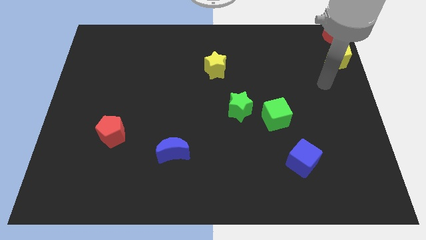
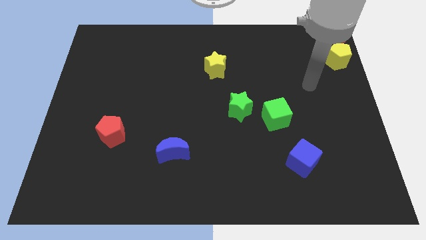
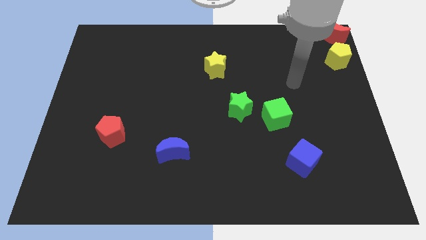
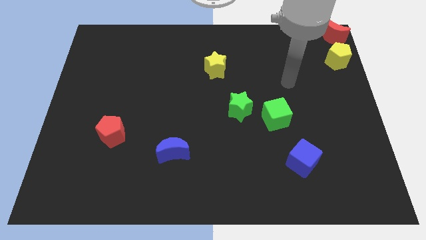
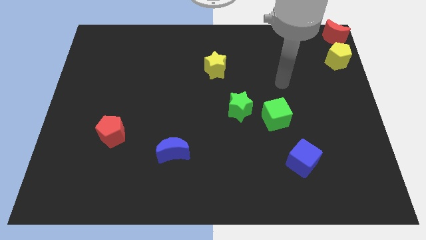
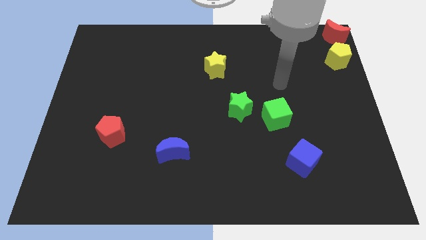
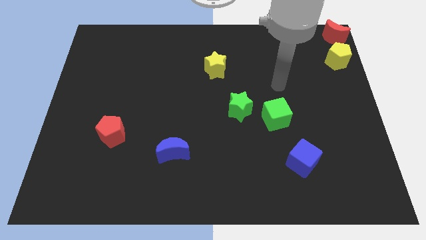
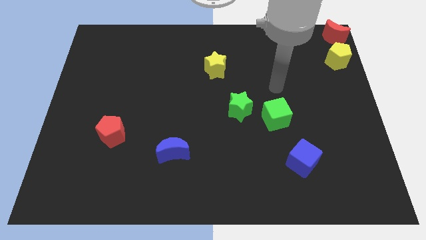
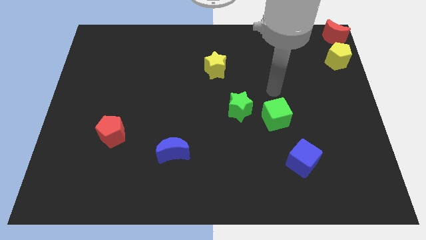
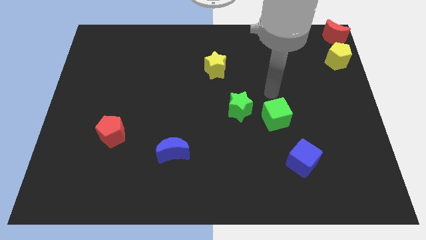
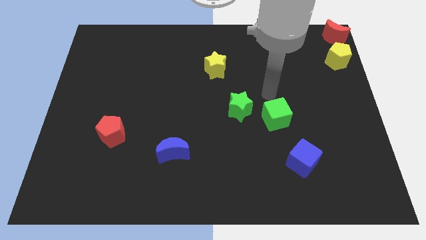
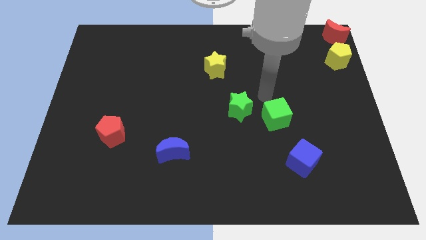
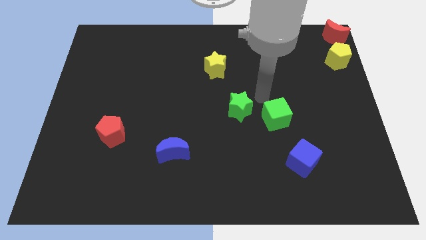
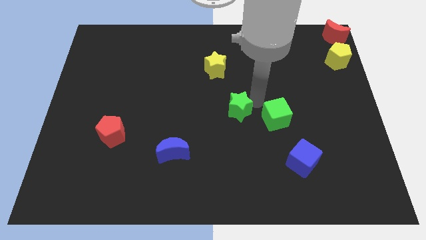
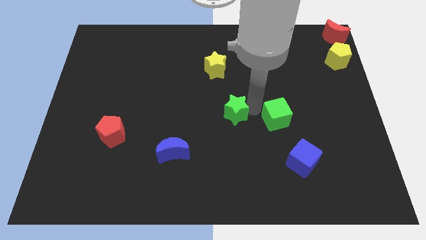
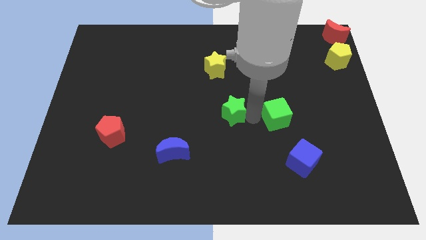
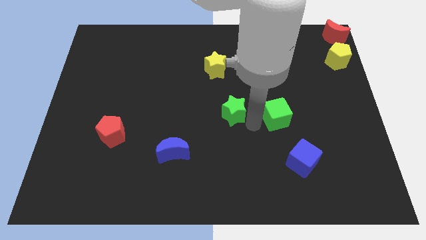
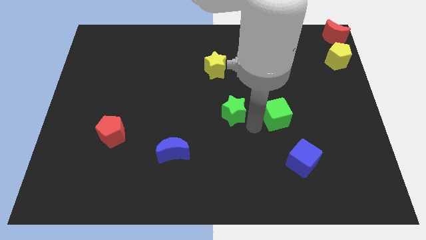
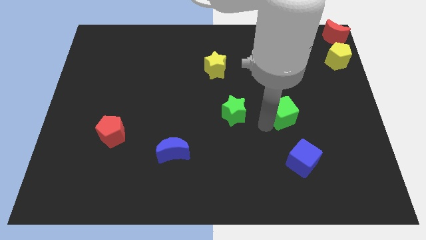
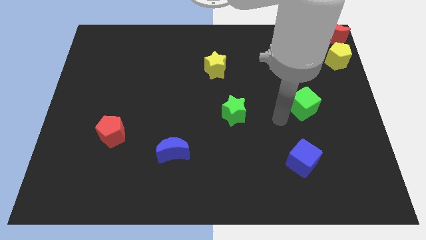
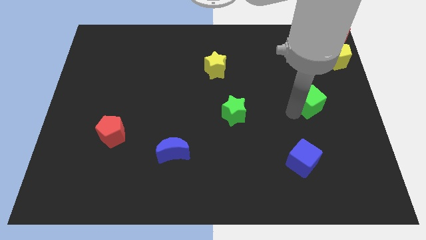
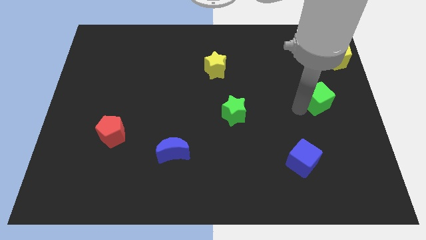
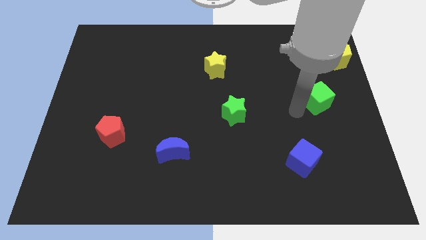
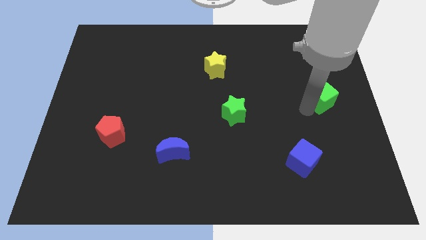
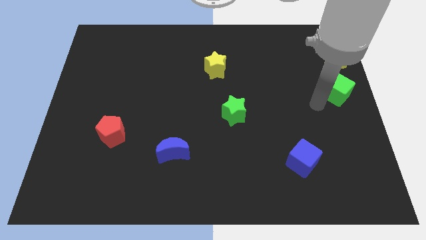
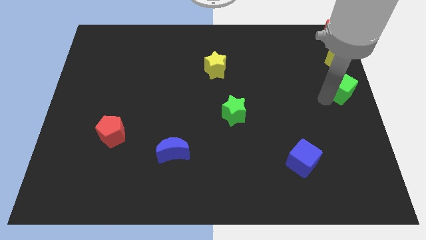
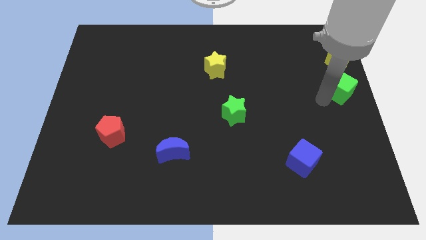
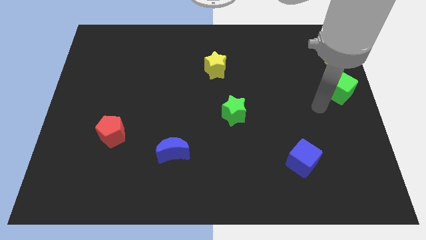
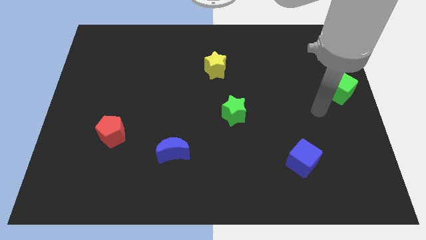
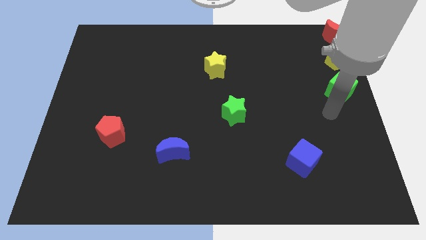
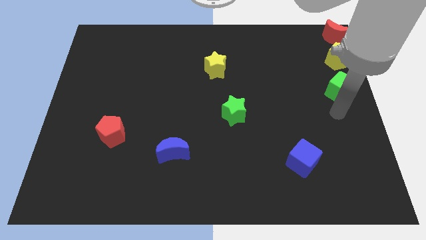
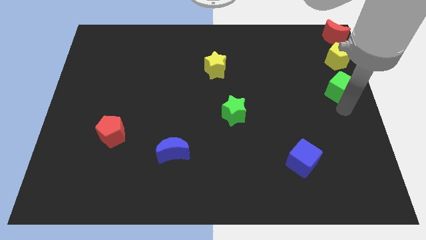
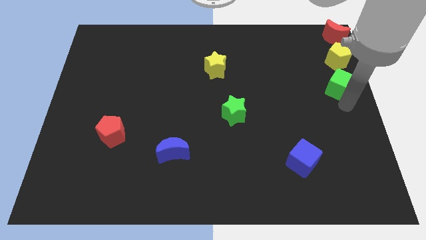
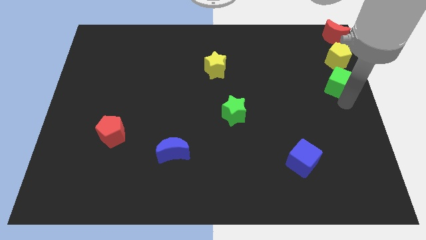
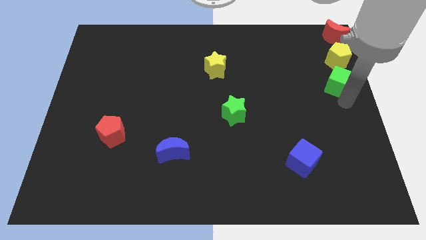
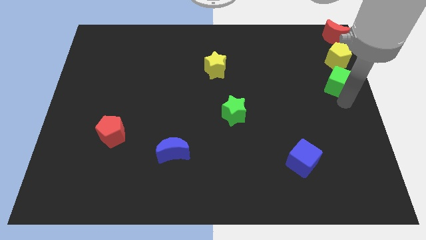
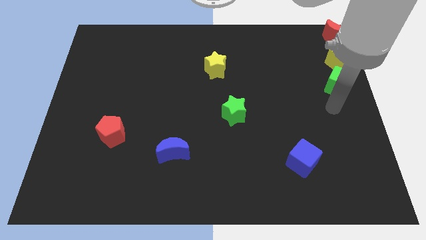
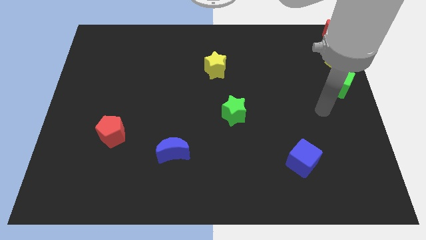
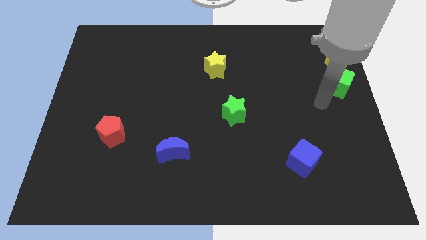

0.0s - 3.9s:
move the green cube to the bottom side of the yellow pentagon

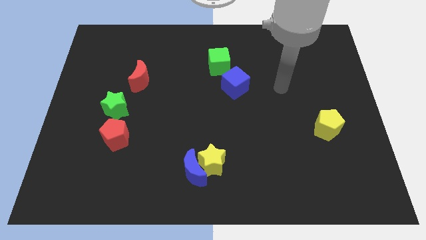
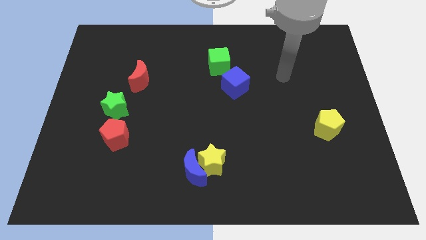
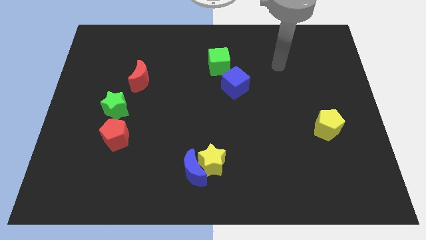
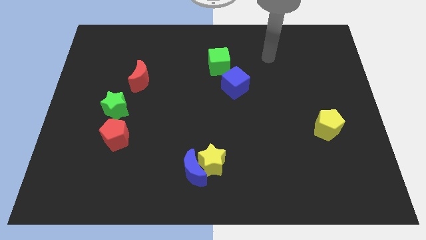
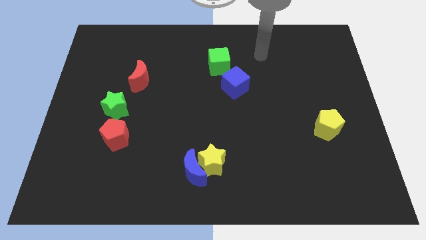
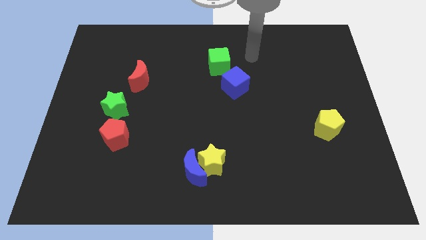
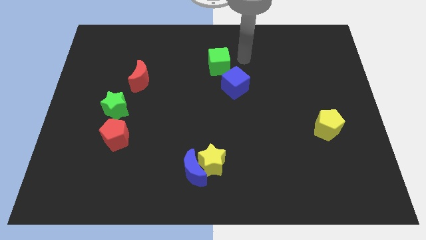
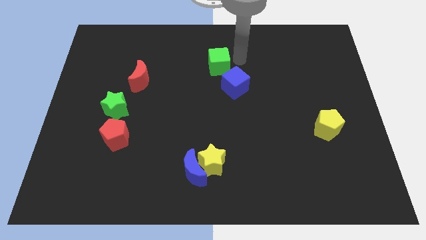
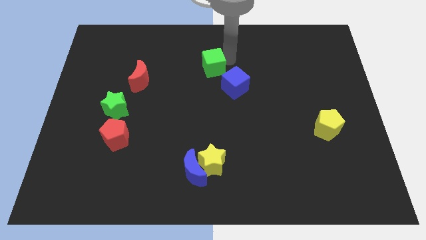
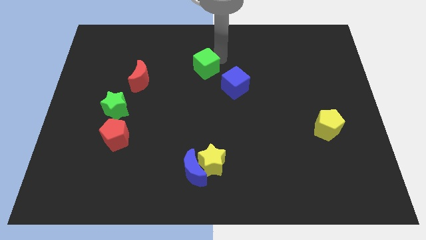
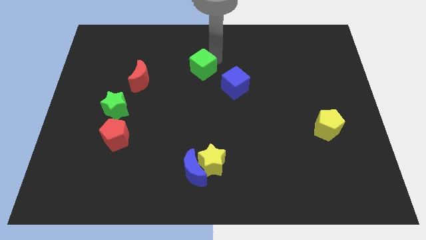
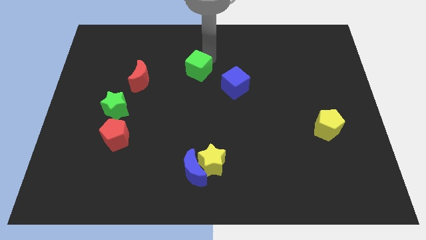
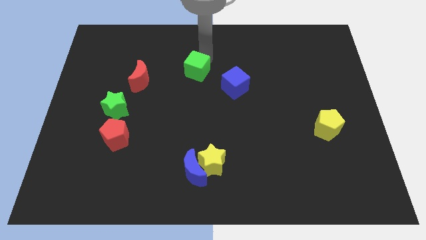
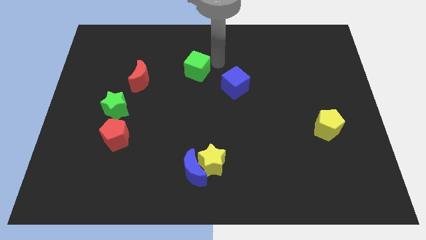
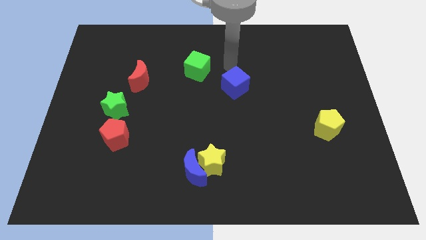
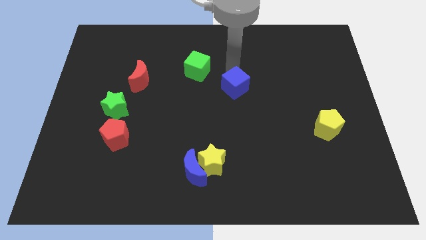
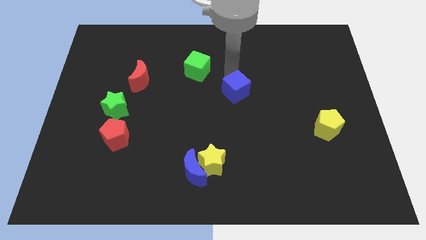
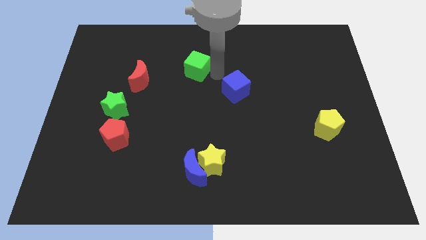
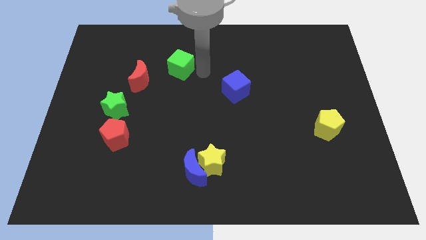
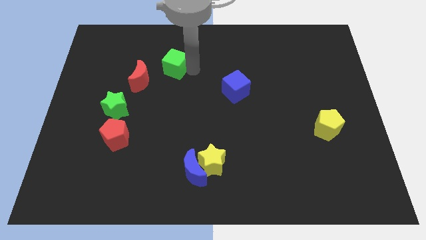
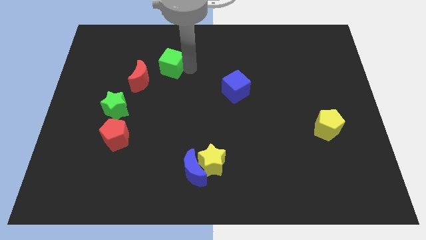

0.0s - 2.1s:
separate the green cube from the blue cube towards left

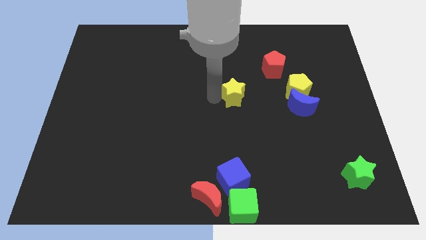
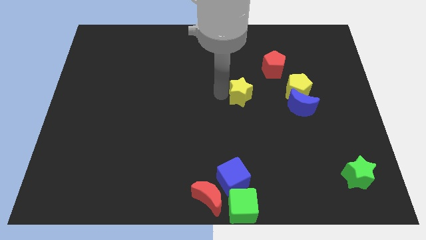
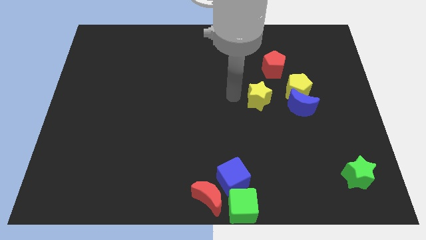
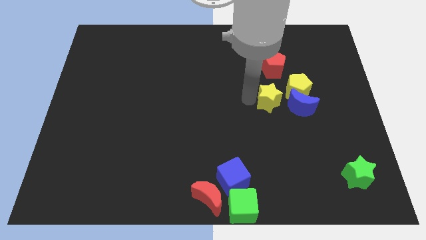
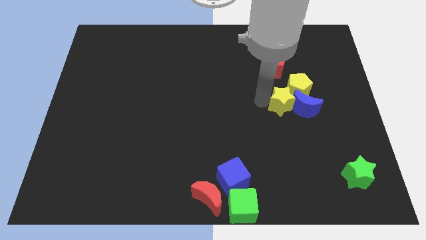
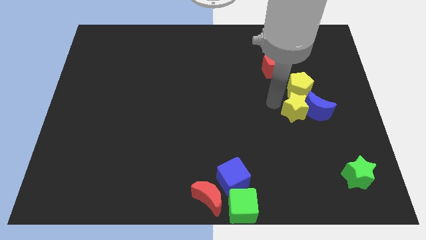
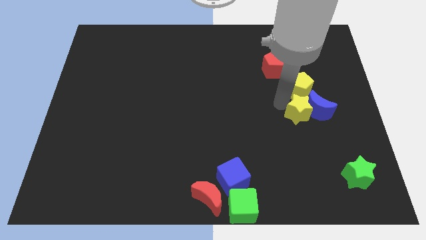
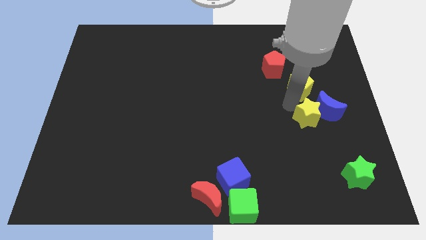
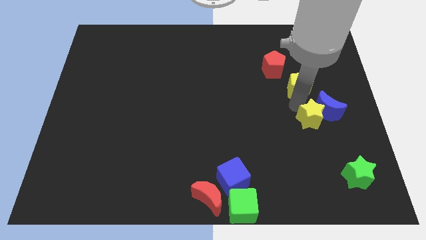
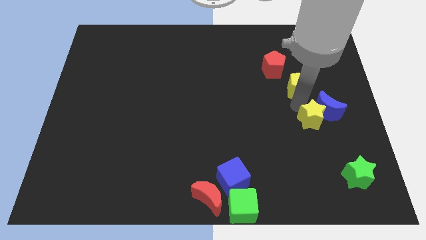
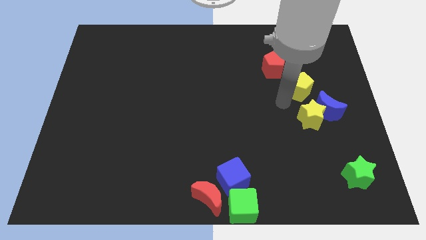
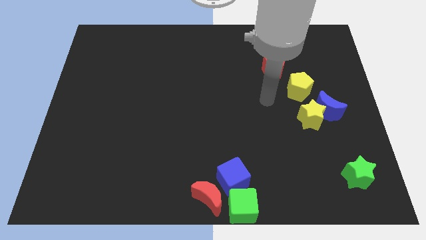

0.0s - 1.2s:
put the yellow star below the yellow pentagon

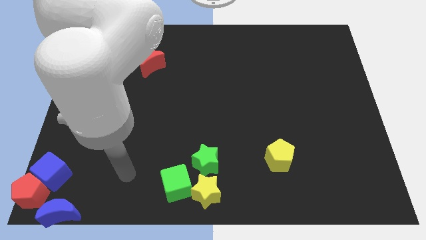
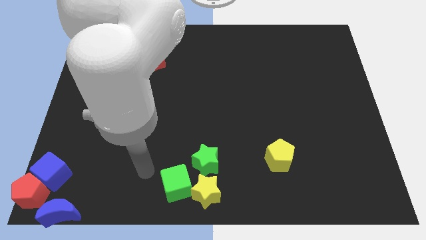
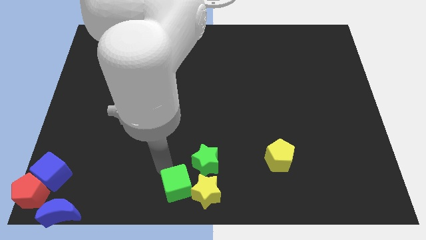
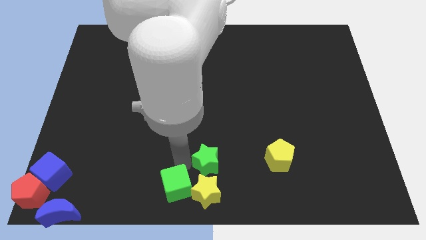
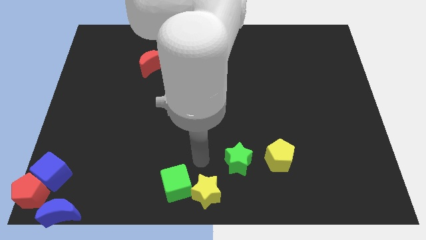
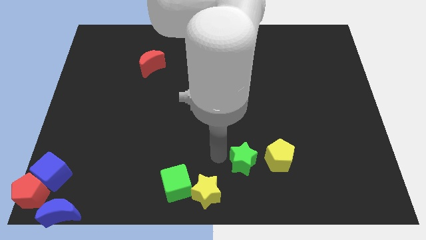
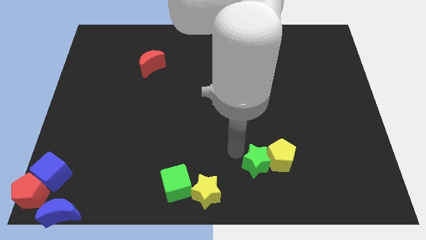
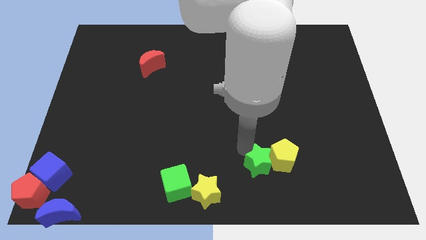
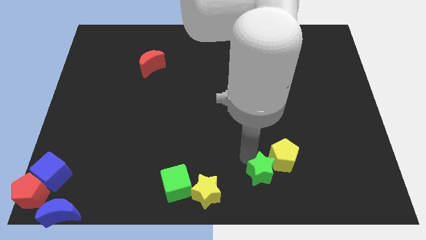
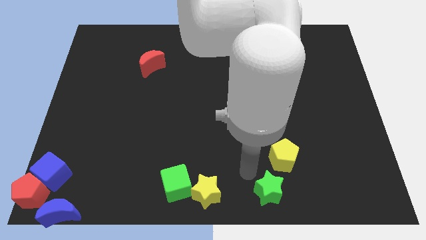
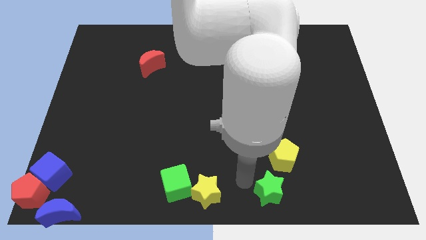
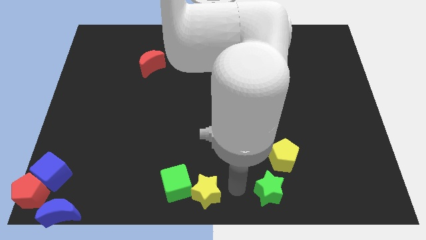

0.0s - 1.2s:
put green star diagonal left to yellow pentagon

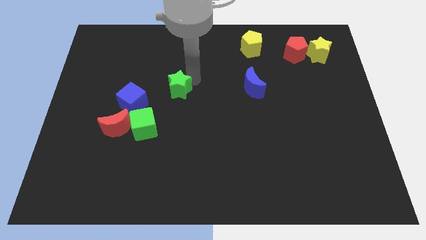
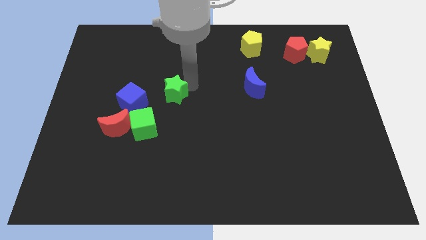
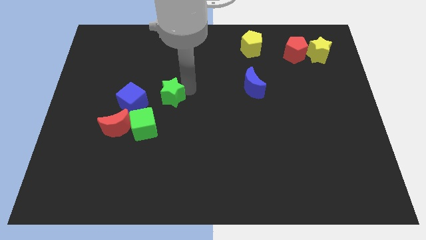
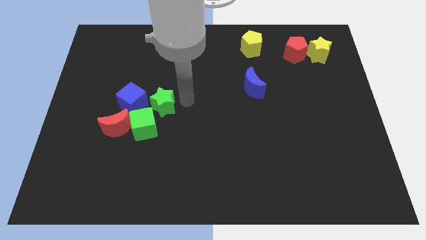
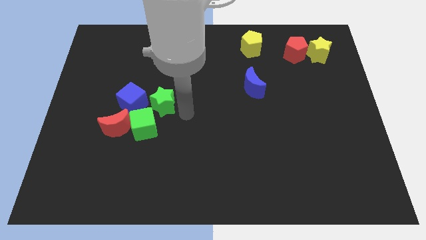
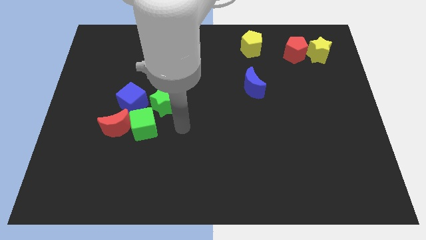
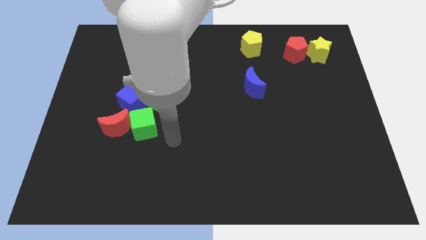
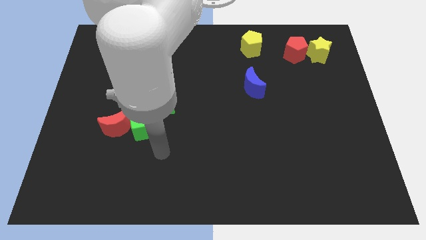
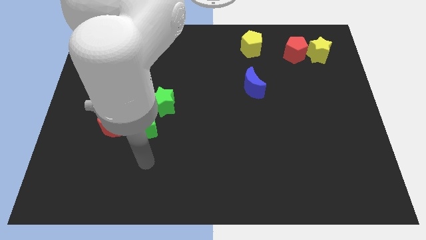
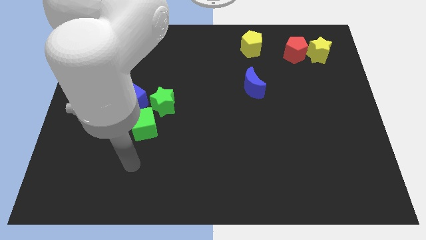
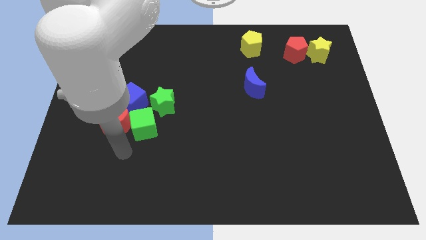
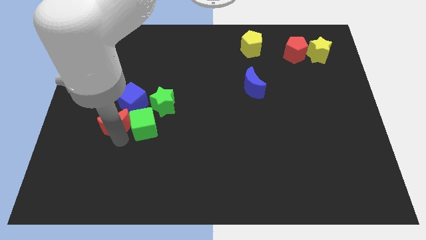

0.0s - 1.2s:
move the green star towards the green cube
